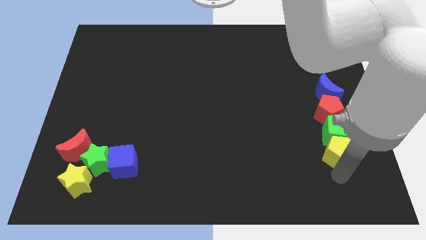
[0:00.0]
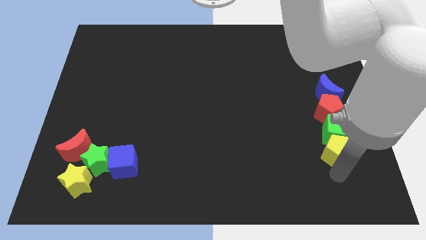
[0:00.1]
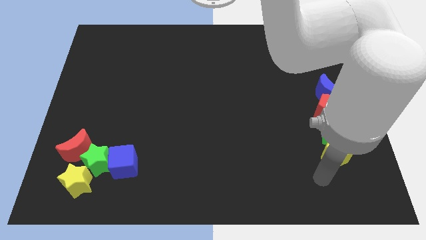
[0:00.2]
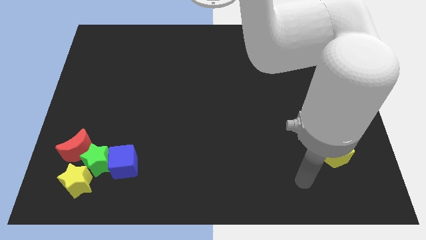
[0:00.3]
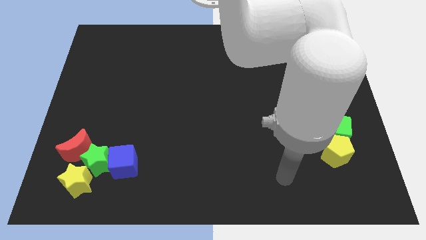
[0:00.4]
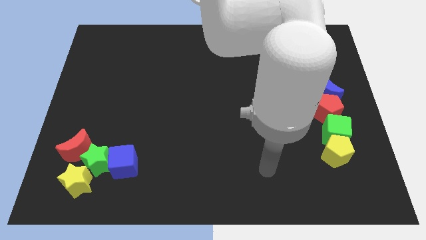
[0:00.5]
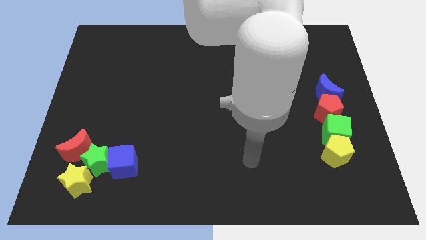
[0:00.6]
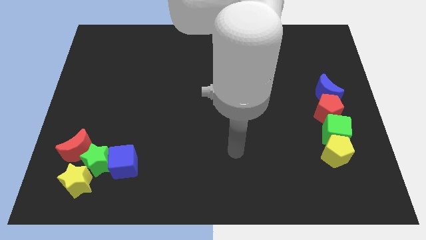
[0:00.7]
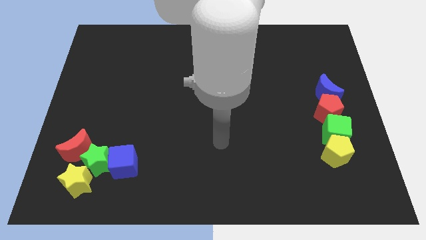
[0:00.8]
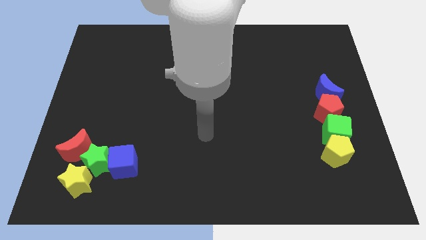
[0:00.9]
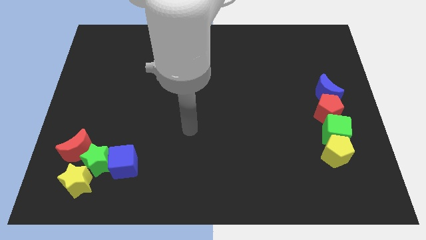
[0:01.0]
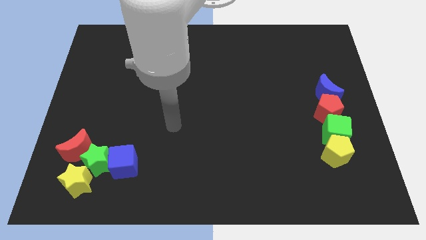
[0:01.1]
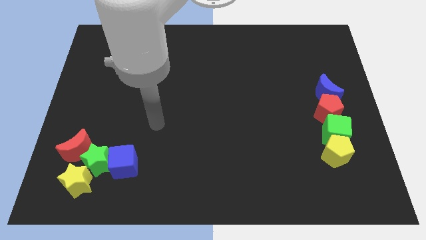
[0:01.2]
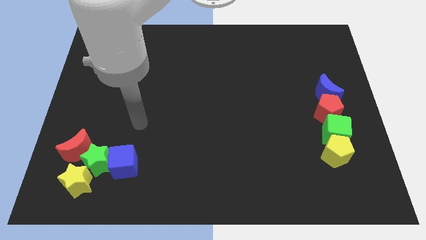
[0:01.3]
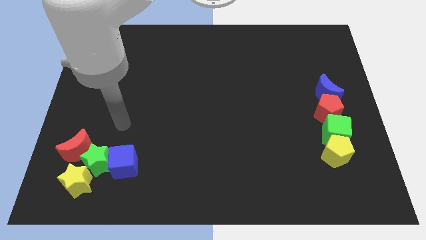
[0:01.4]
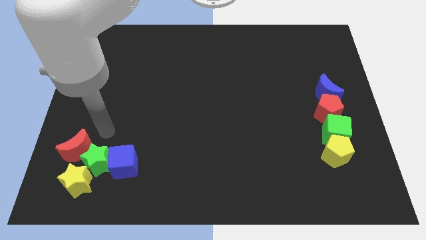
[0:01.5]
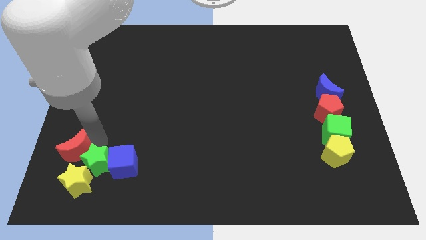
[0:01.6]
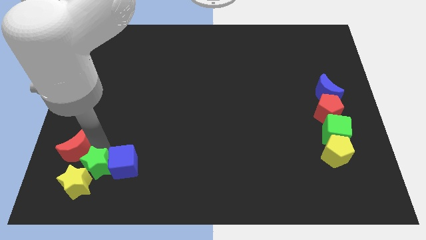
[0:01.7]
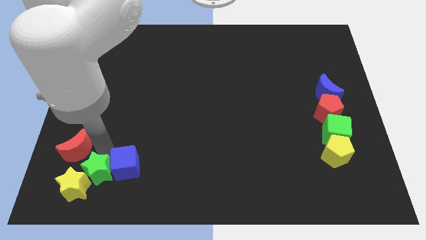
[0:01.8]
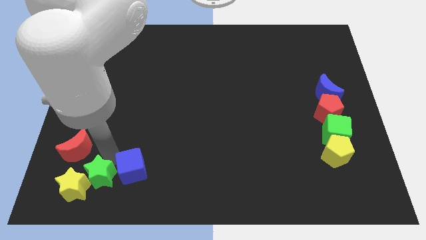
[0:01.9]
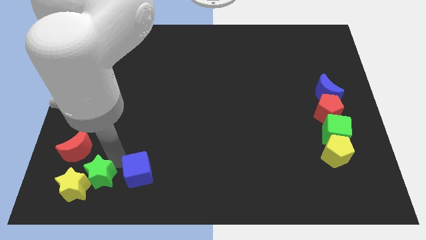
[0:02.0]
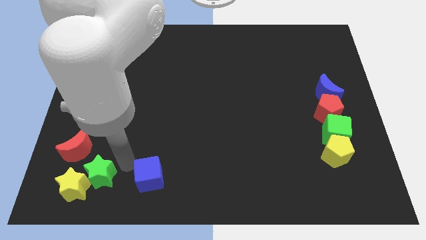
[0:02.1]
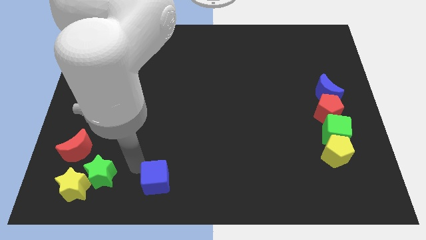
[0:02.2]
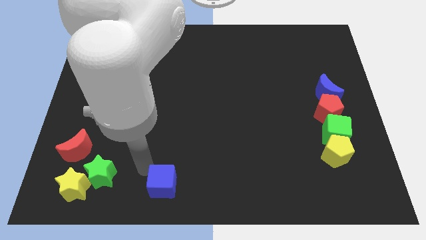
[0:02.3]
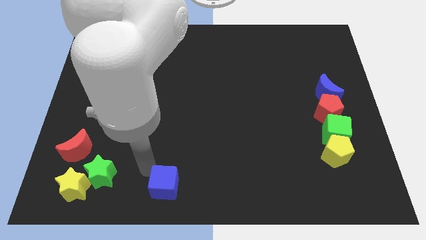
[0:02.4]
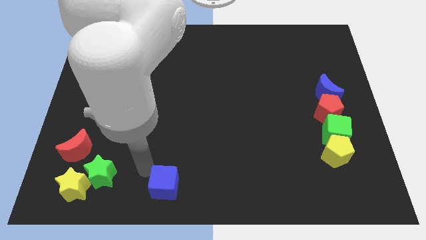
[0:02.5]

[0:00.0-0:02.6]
separate the blue cube from the green star

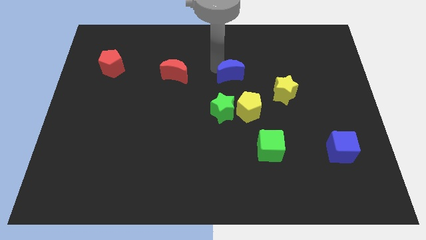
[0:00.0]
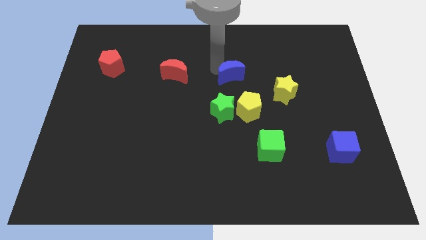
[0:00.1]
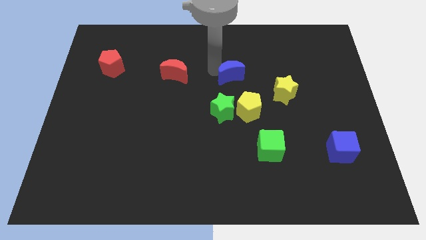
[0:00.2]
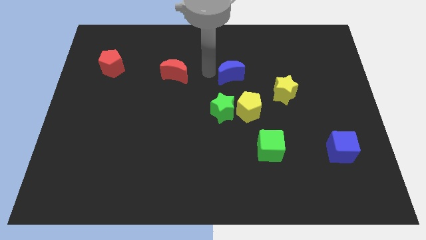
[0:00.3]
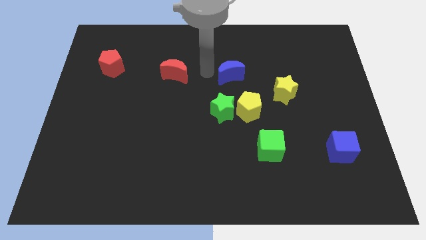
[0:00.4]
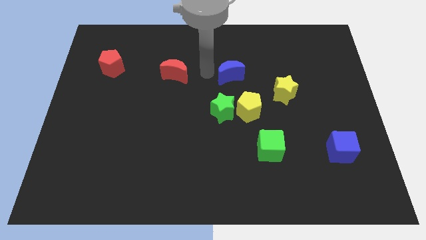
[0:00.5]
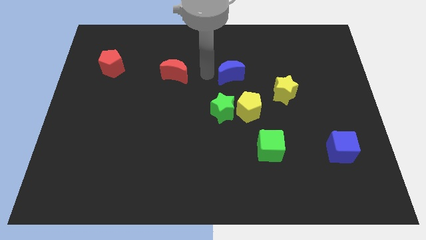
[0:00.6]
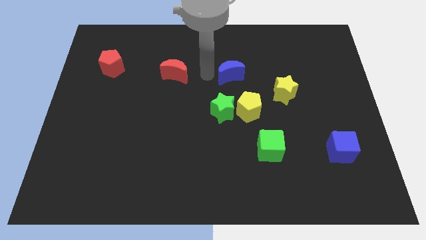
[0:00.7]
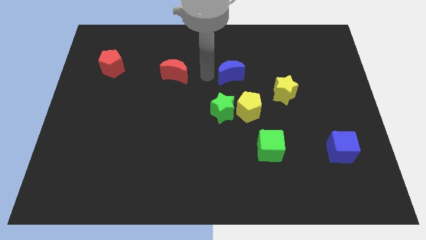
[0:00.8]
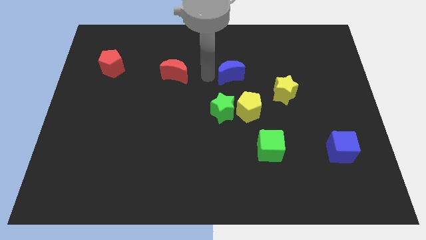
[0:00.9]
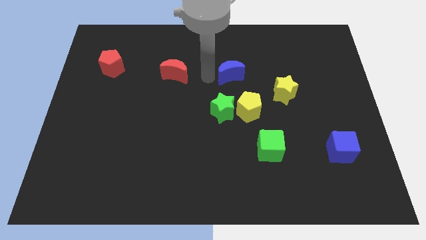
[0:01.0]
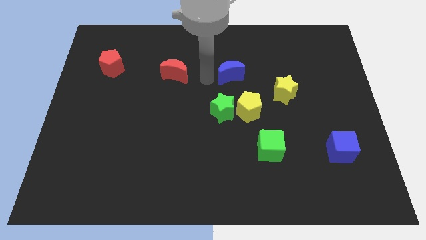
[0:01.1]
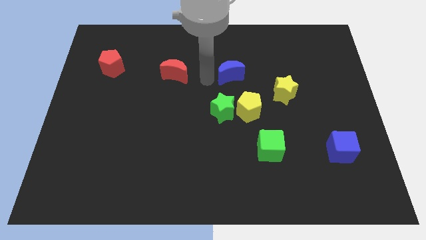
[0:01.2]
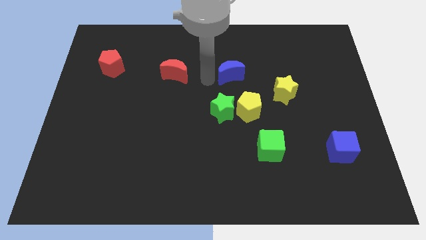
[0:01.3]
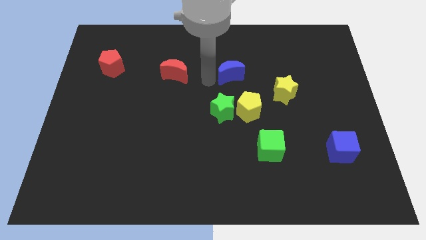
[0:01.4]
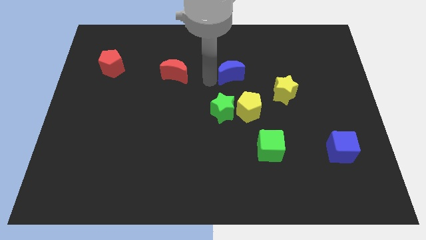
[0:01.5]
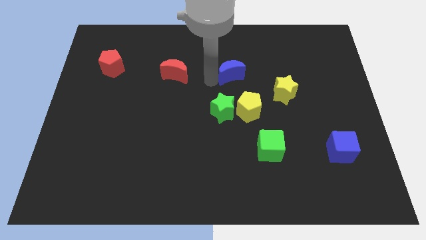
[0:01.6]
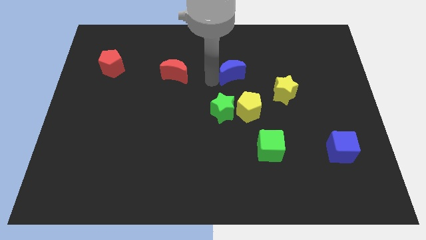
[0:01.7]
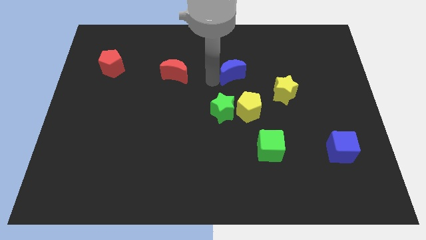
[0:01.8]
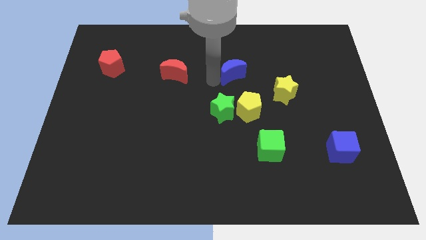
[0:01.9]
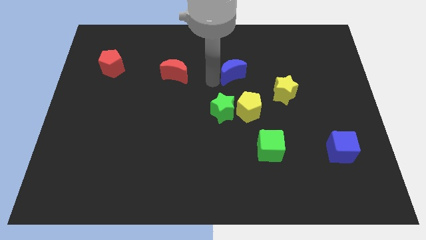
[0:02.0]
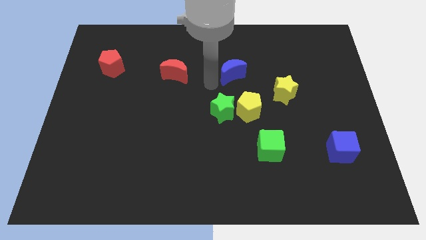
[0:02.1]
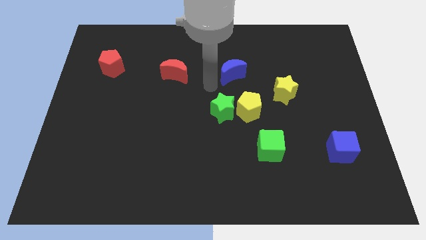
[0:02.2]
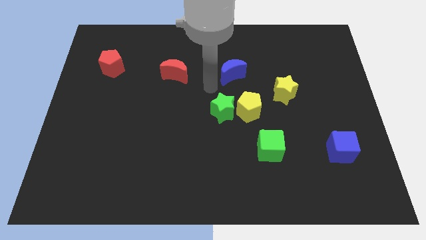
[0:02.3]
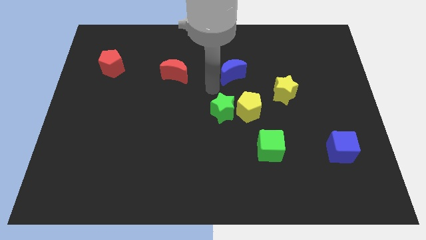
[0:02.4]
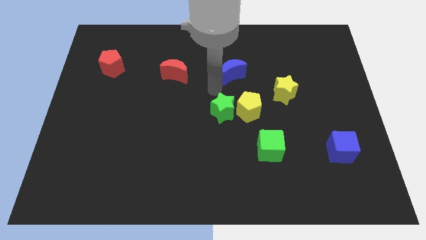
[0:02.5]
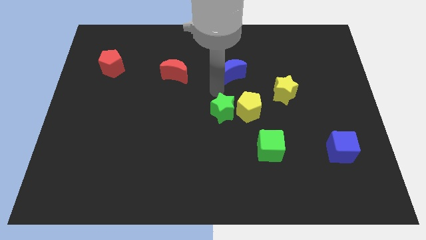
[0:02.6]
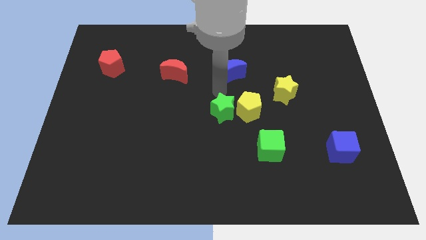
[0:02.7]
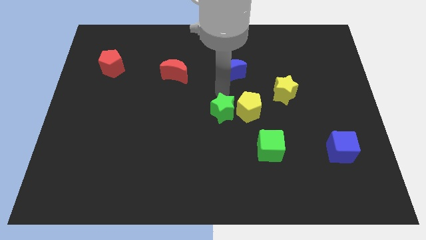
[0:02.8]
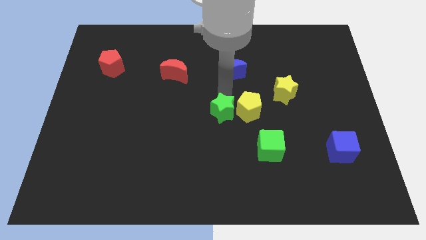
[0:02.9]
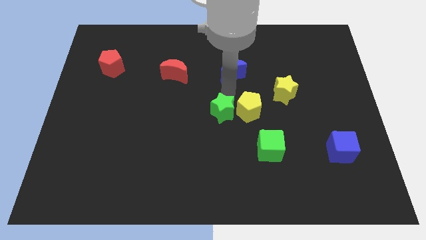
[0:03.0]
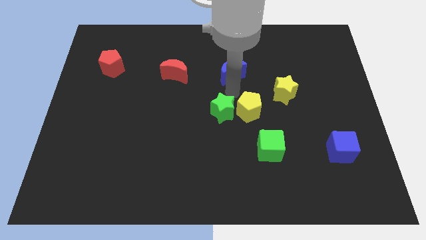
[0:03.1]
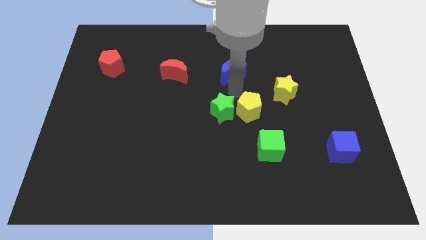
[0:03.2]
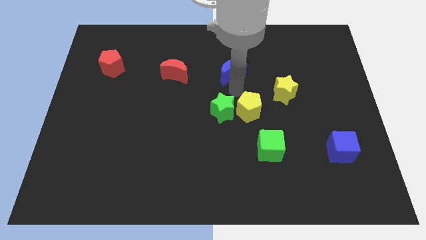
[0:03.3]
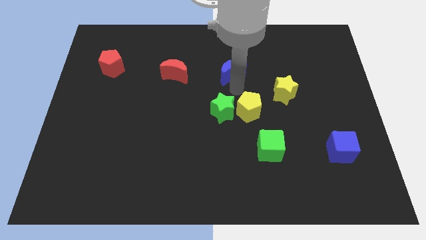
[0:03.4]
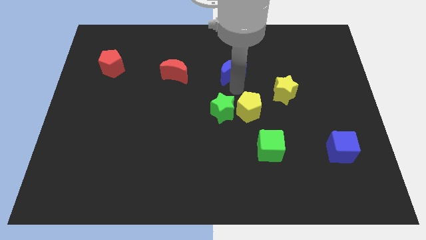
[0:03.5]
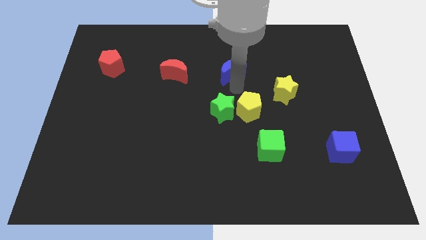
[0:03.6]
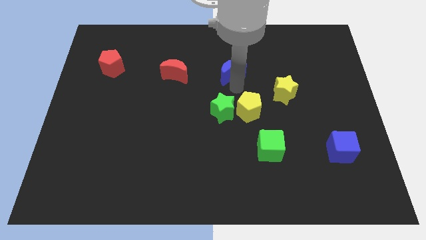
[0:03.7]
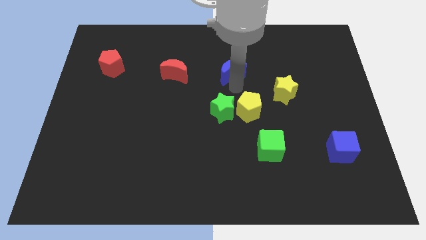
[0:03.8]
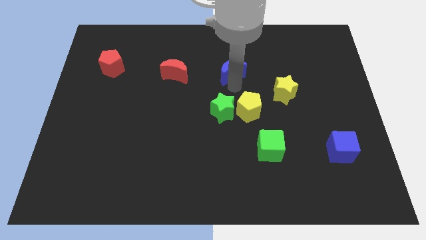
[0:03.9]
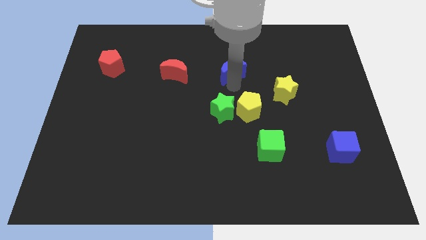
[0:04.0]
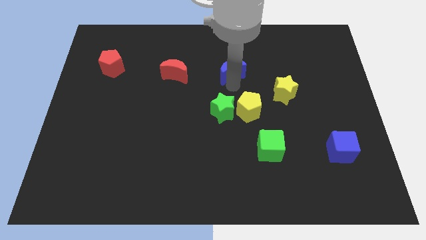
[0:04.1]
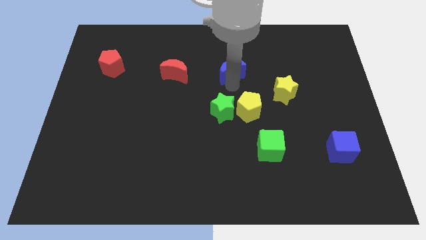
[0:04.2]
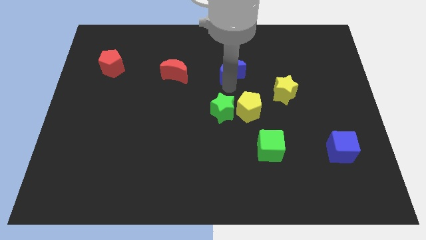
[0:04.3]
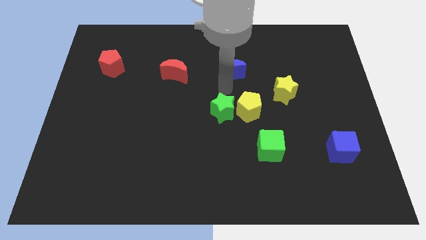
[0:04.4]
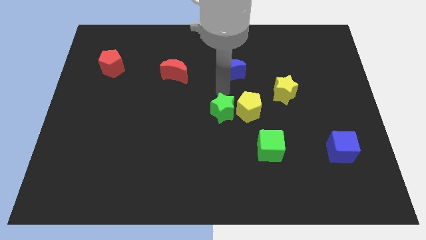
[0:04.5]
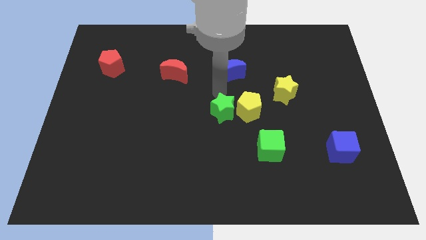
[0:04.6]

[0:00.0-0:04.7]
move your hand to the top of the green star

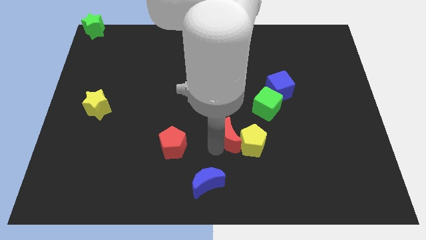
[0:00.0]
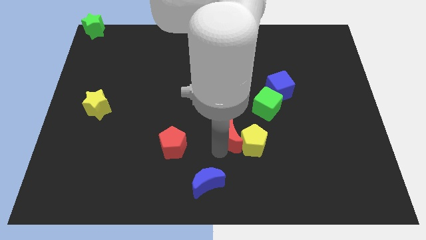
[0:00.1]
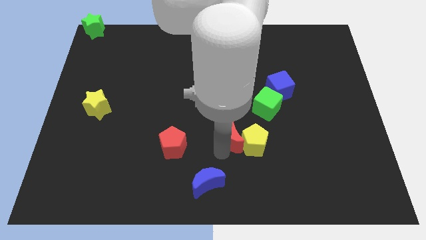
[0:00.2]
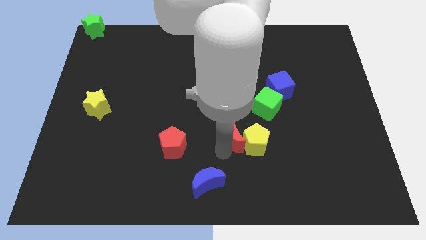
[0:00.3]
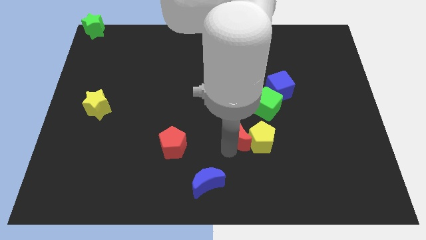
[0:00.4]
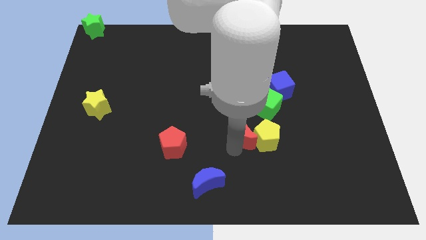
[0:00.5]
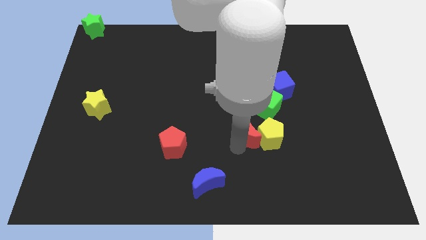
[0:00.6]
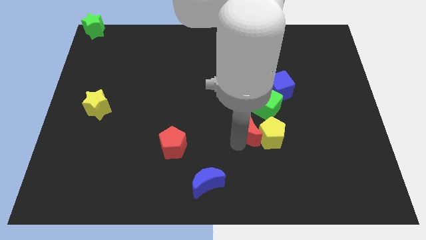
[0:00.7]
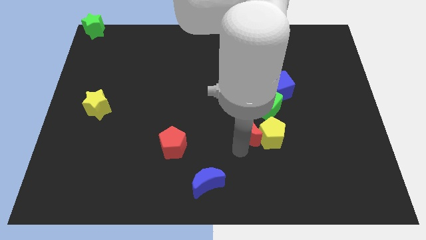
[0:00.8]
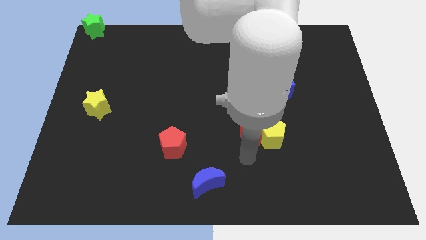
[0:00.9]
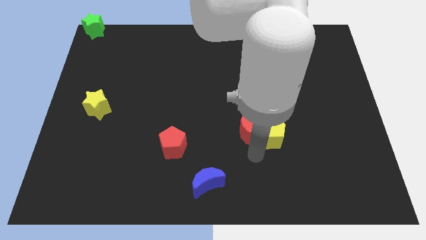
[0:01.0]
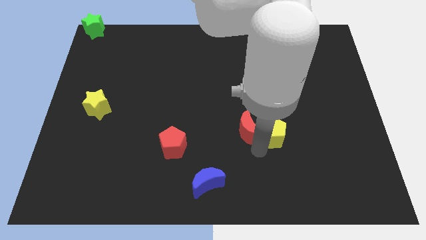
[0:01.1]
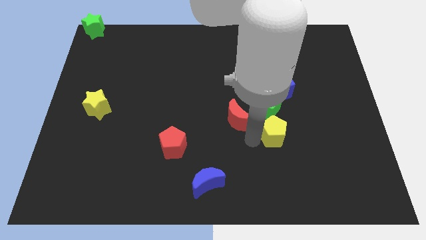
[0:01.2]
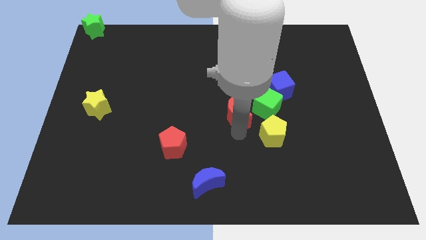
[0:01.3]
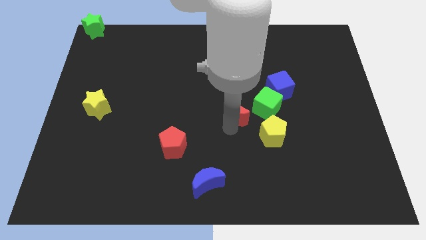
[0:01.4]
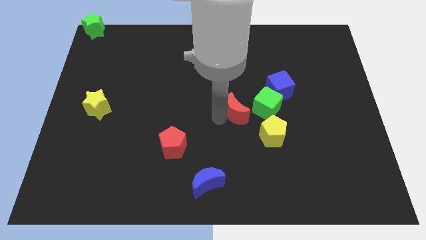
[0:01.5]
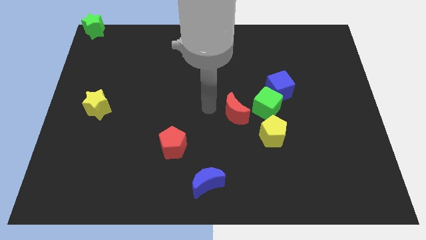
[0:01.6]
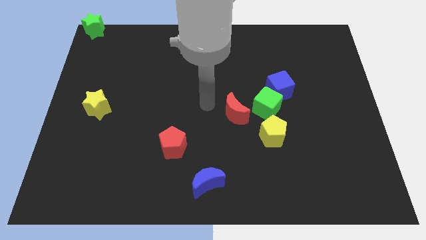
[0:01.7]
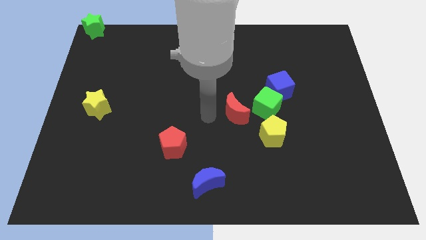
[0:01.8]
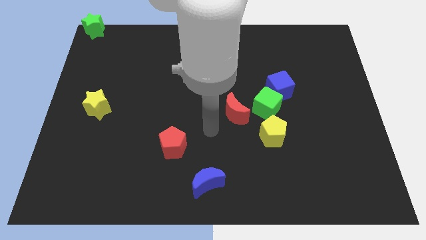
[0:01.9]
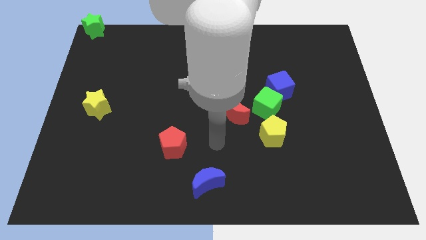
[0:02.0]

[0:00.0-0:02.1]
separate red crescent and yellow pentagon
